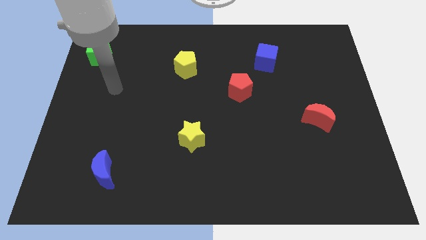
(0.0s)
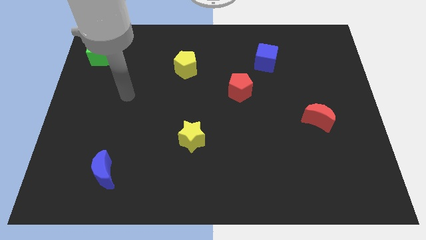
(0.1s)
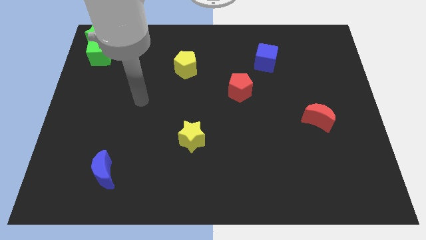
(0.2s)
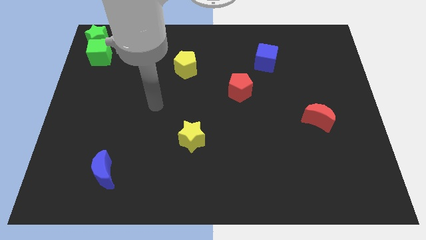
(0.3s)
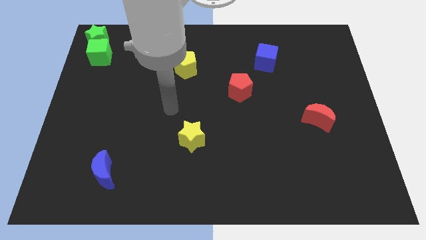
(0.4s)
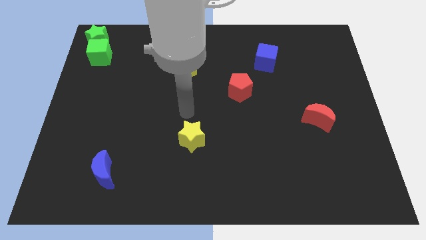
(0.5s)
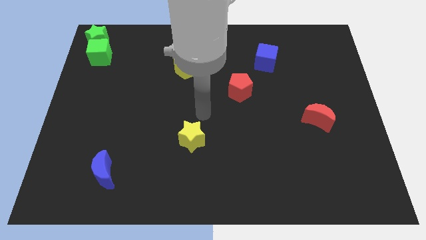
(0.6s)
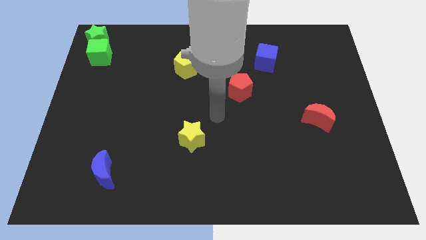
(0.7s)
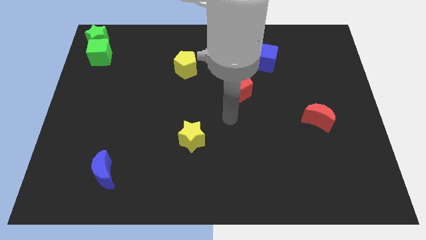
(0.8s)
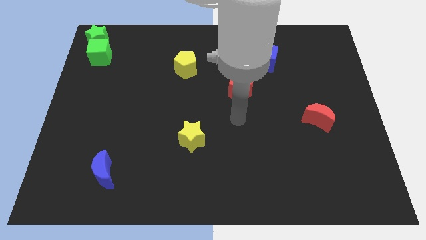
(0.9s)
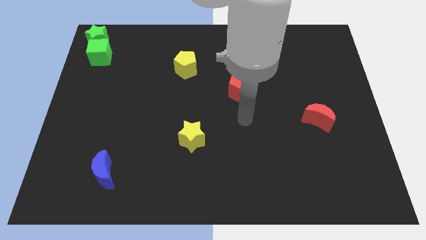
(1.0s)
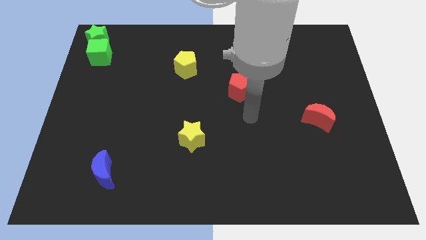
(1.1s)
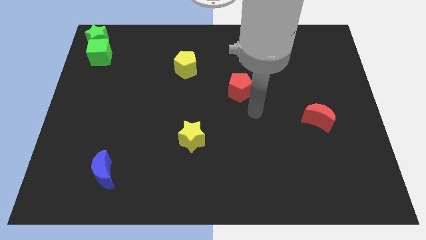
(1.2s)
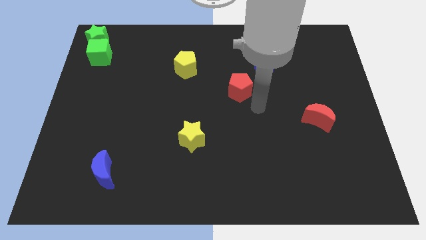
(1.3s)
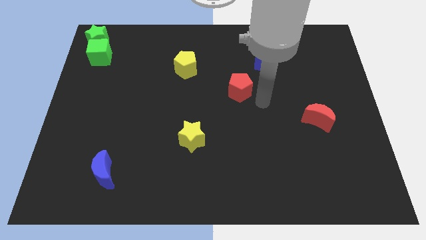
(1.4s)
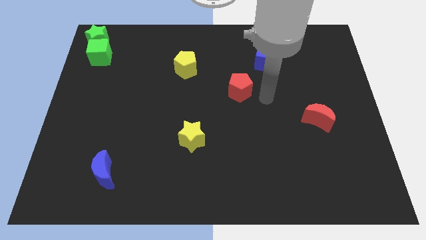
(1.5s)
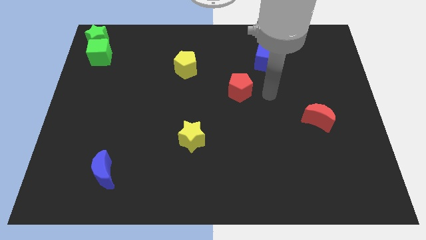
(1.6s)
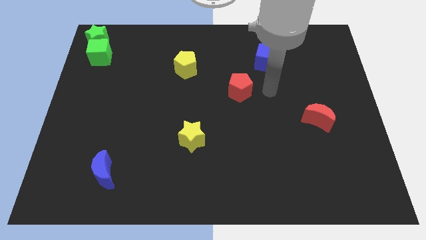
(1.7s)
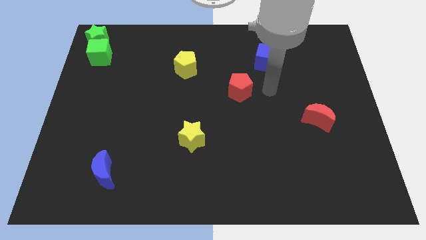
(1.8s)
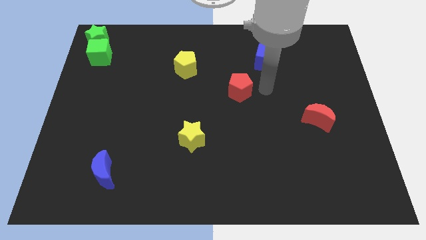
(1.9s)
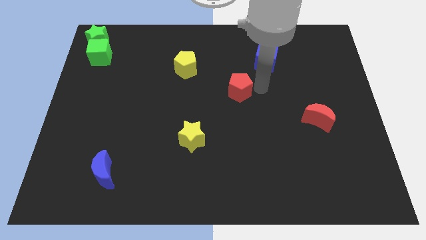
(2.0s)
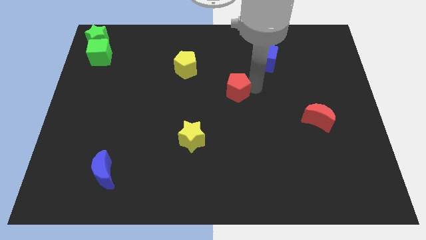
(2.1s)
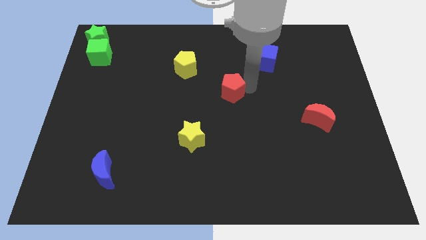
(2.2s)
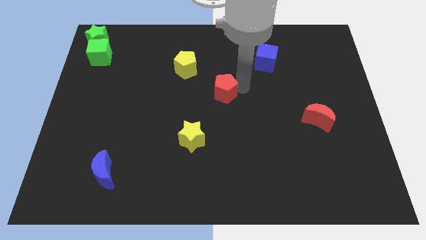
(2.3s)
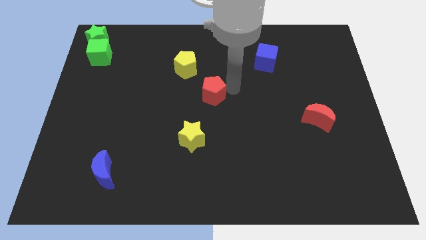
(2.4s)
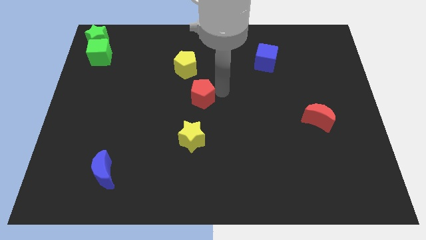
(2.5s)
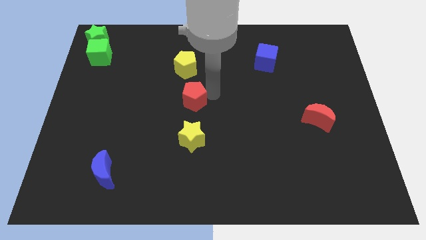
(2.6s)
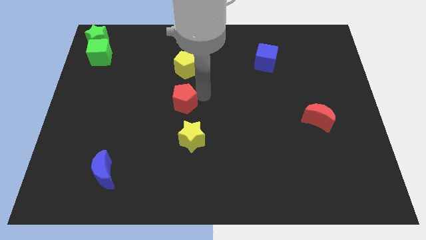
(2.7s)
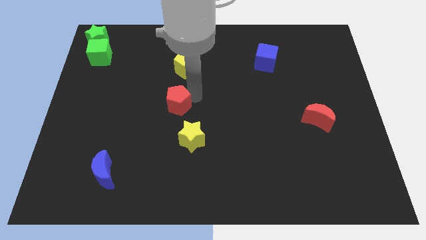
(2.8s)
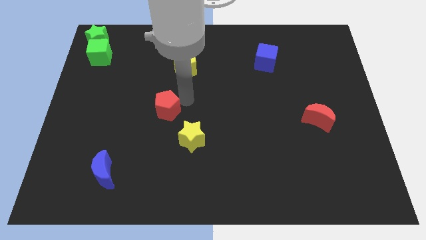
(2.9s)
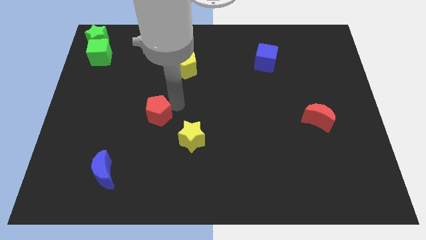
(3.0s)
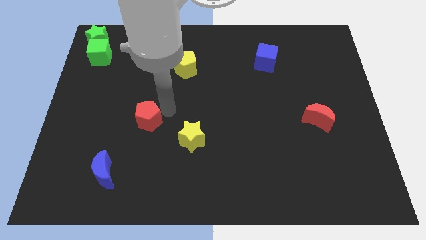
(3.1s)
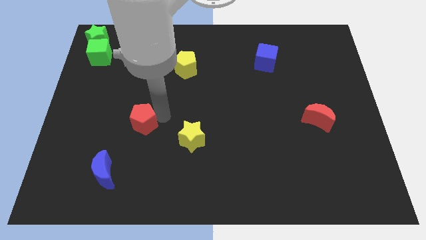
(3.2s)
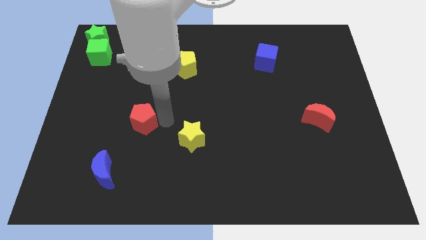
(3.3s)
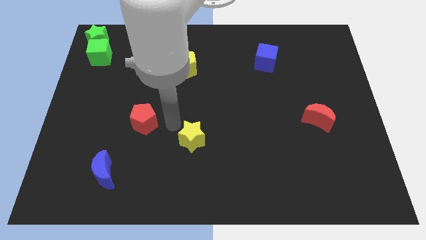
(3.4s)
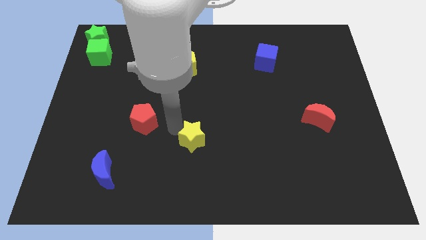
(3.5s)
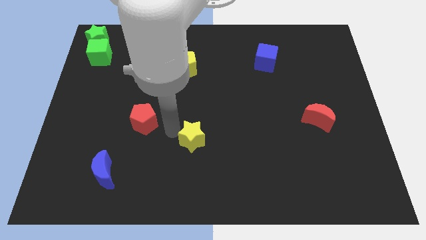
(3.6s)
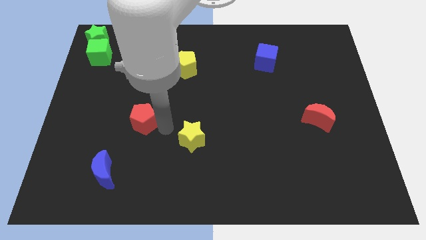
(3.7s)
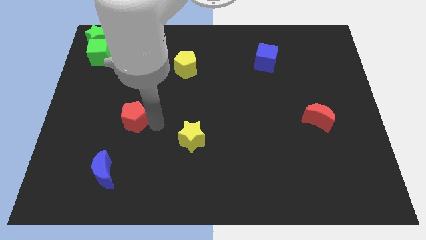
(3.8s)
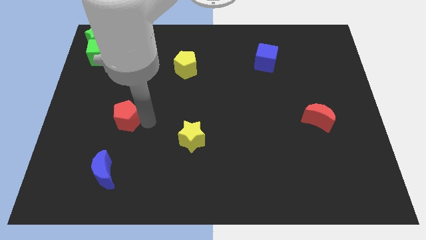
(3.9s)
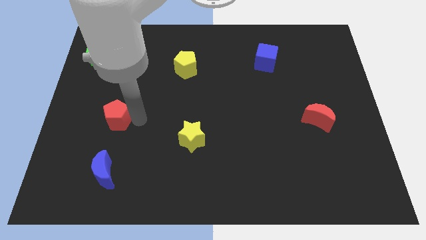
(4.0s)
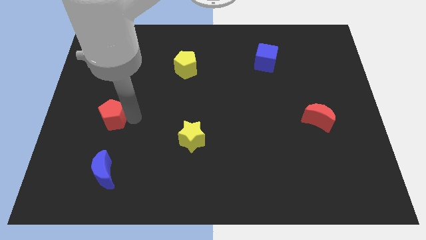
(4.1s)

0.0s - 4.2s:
place the red pentagon above the blue crescent

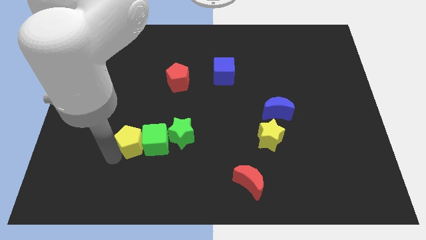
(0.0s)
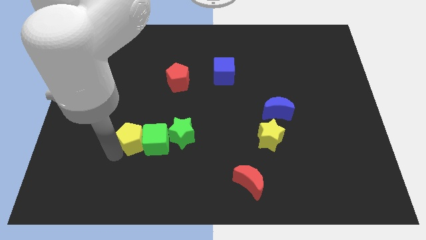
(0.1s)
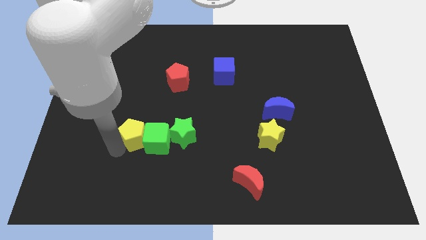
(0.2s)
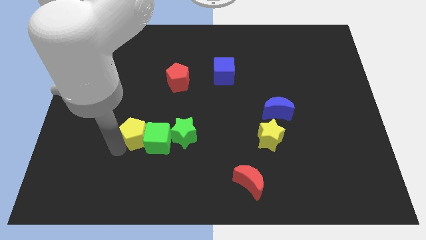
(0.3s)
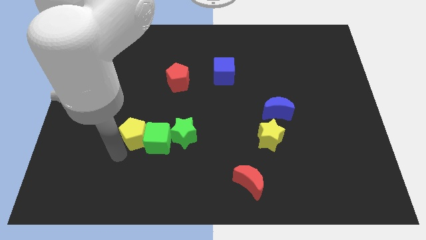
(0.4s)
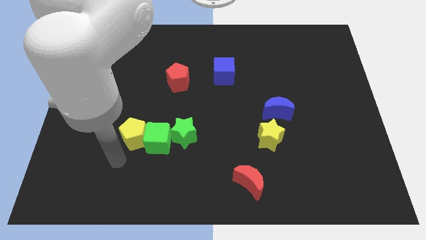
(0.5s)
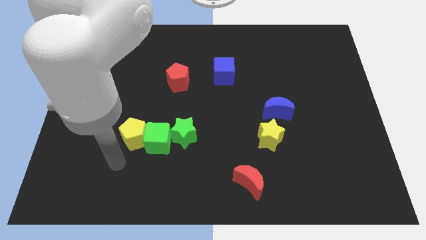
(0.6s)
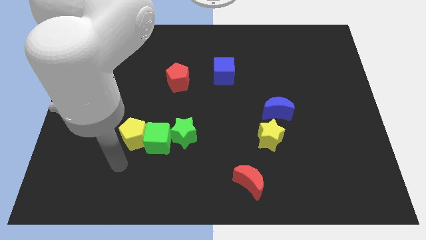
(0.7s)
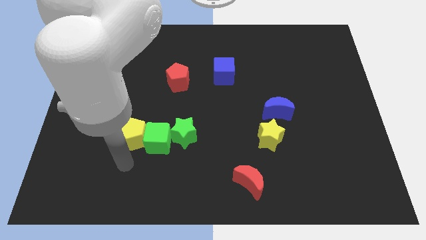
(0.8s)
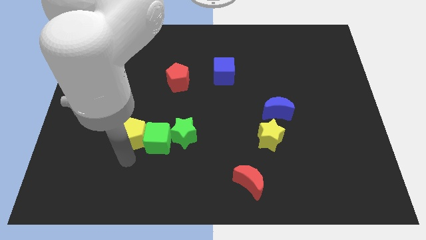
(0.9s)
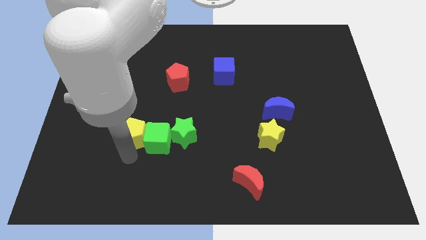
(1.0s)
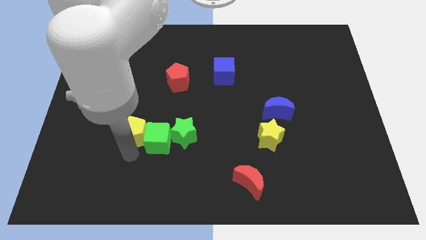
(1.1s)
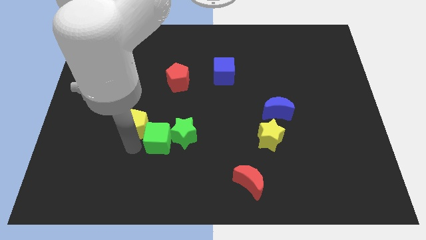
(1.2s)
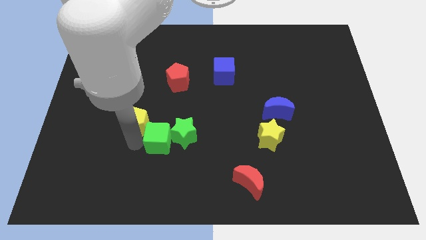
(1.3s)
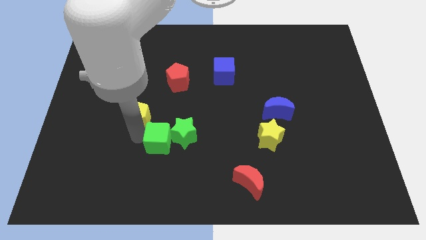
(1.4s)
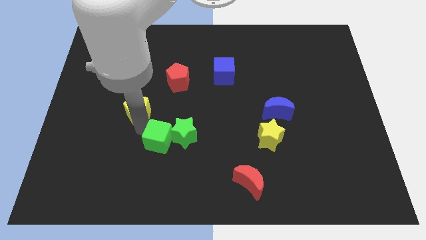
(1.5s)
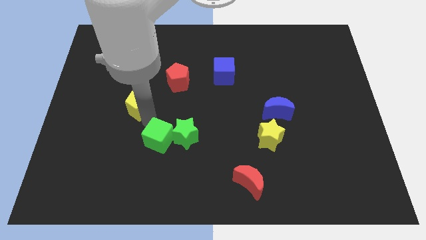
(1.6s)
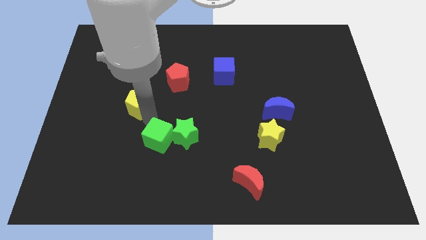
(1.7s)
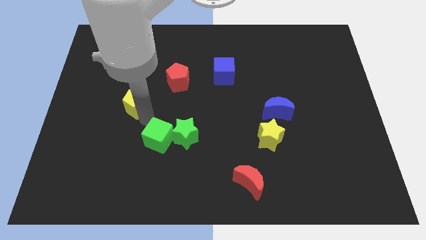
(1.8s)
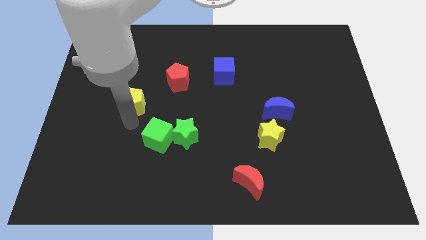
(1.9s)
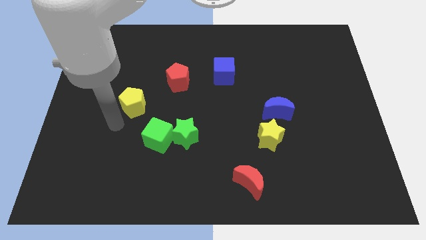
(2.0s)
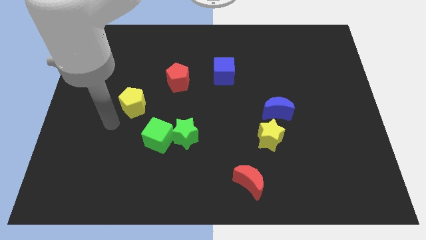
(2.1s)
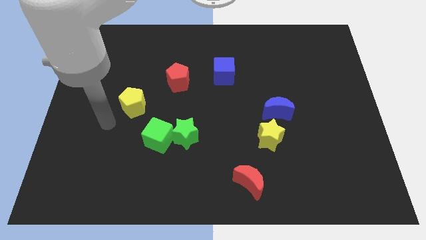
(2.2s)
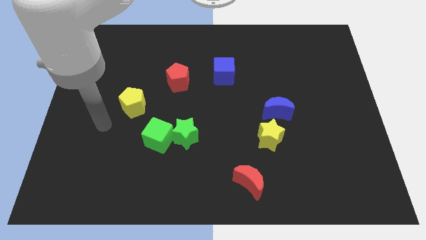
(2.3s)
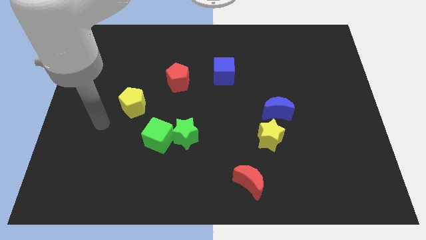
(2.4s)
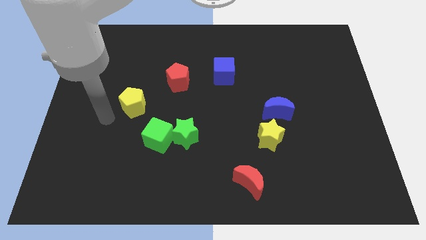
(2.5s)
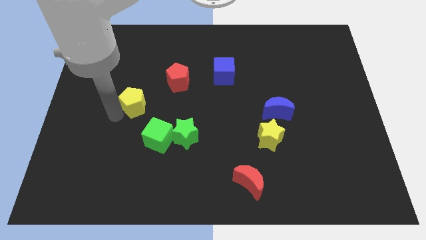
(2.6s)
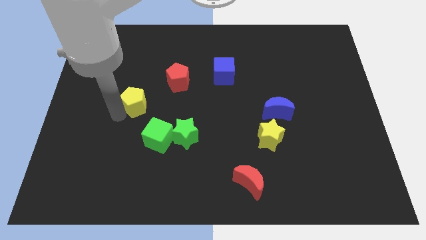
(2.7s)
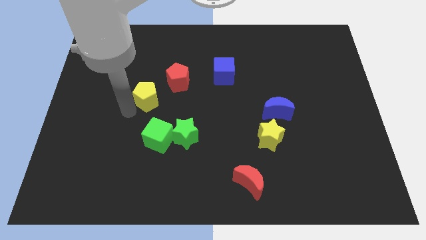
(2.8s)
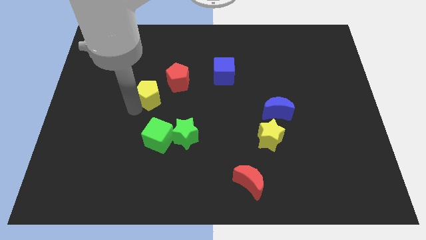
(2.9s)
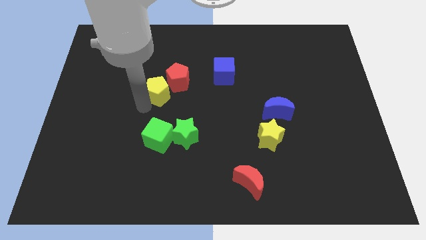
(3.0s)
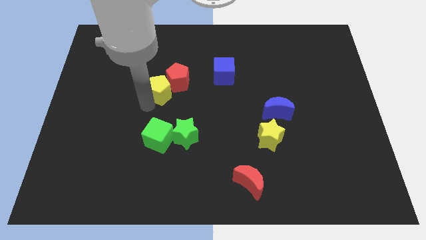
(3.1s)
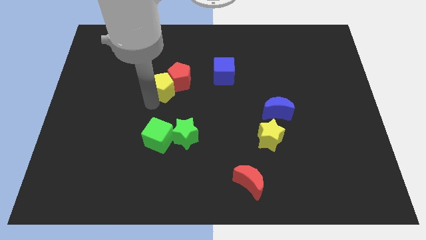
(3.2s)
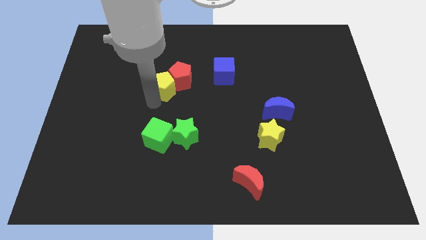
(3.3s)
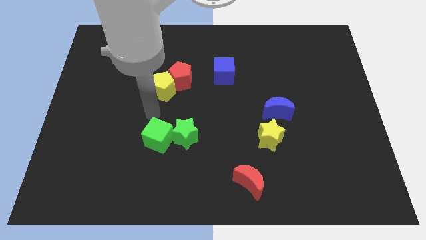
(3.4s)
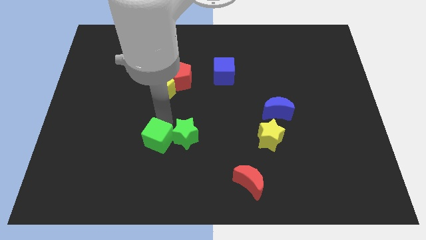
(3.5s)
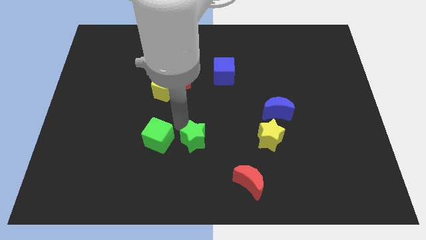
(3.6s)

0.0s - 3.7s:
push the yellow pentagon to the left of the red pentagon

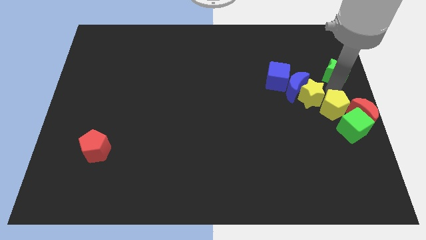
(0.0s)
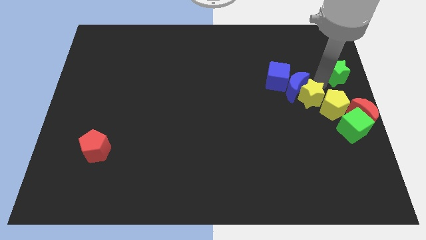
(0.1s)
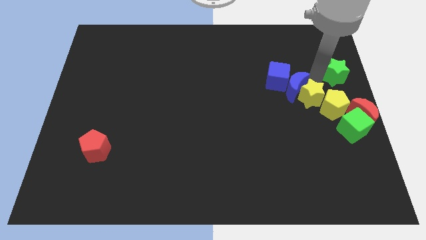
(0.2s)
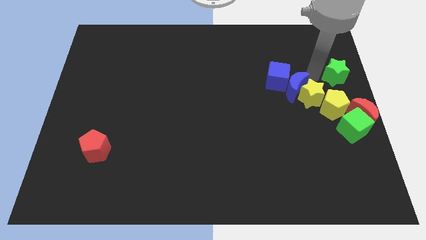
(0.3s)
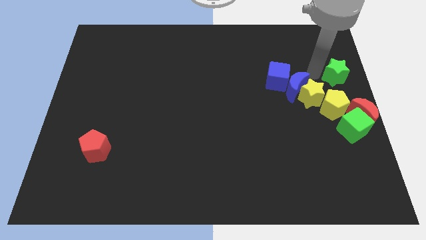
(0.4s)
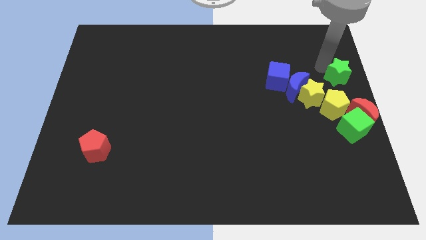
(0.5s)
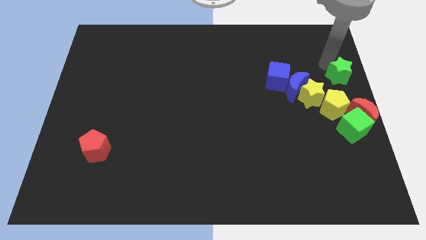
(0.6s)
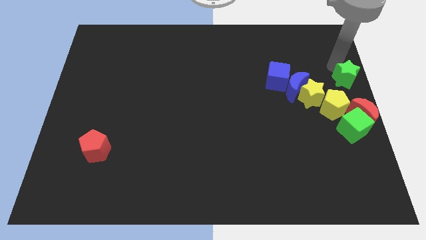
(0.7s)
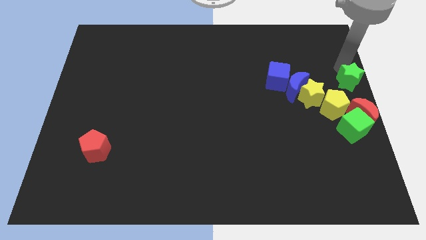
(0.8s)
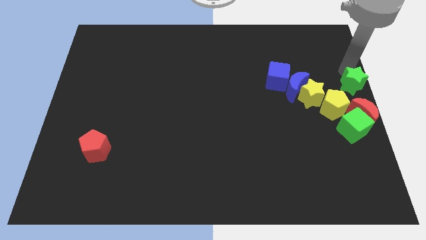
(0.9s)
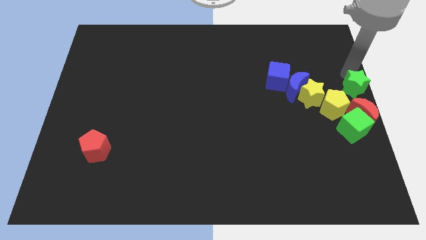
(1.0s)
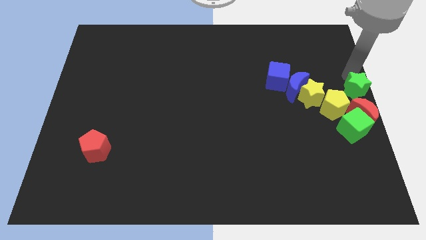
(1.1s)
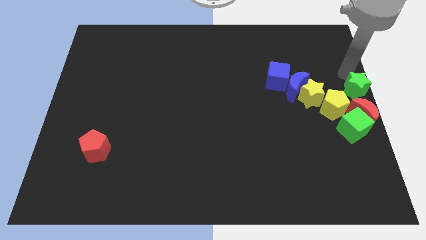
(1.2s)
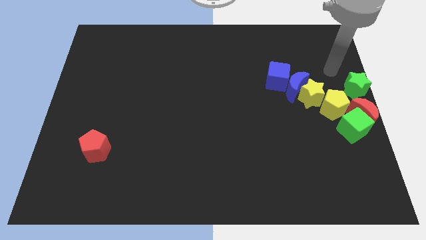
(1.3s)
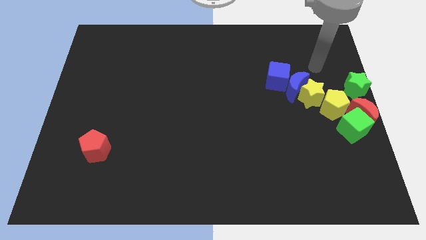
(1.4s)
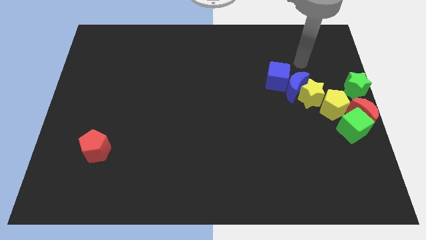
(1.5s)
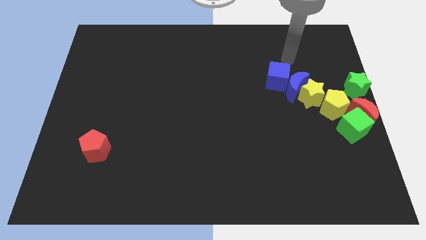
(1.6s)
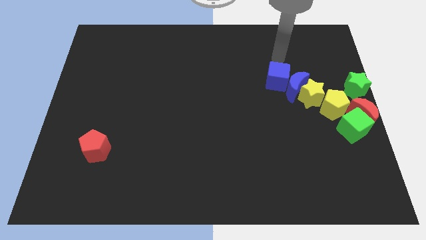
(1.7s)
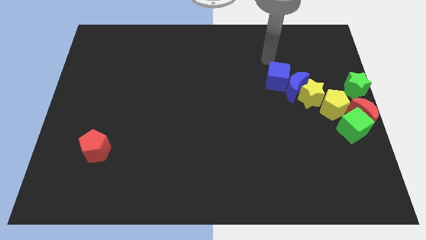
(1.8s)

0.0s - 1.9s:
move the green star towards the red crescent
